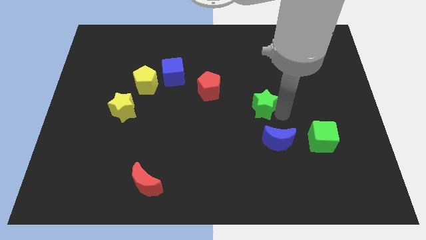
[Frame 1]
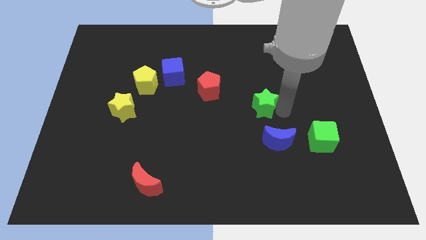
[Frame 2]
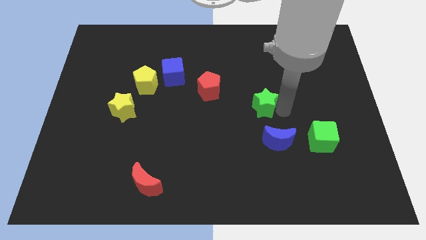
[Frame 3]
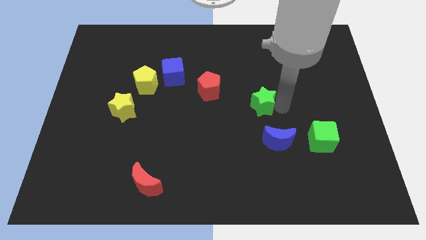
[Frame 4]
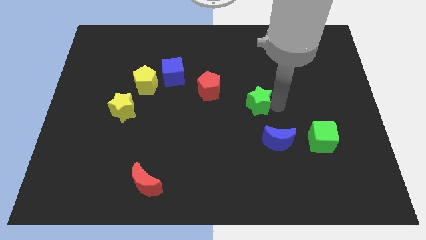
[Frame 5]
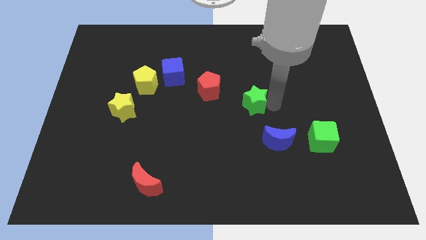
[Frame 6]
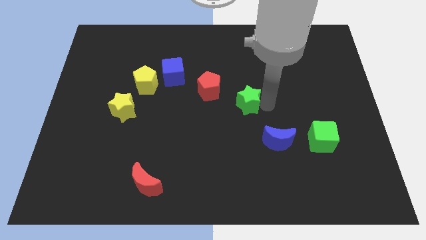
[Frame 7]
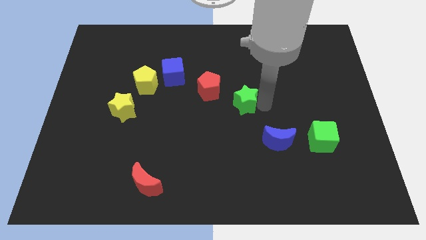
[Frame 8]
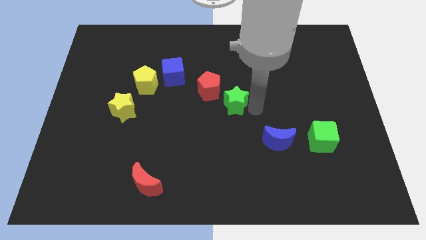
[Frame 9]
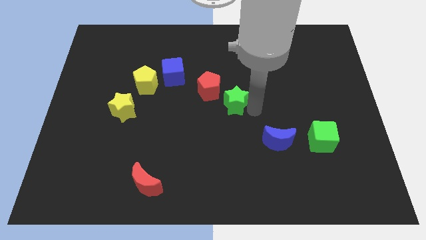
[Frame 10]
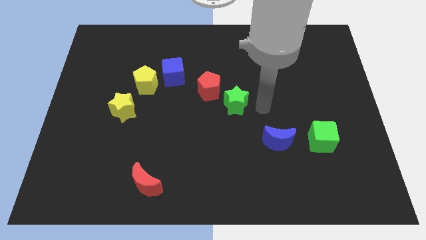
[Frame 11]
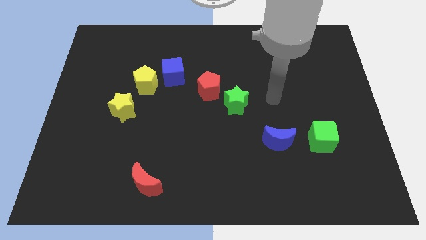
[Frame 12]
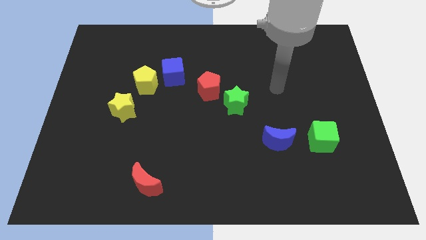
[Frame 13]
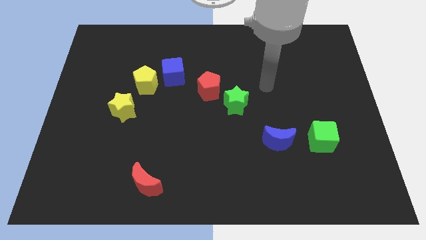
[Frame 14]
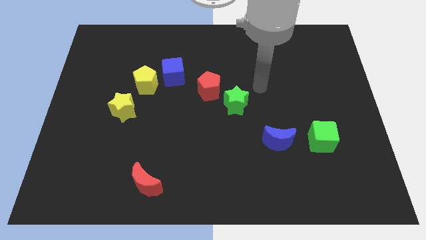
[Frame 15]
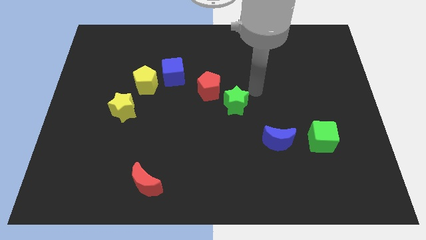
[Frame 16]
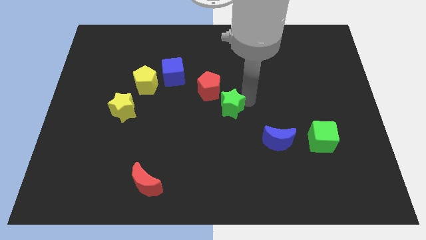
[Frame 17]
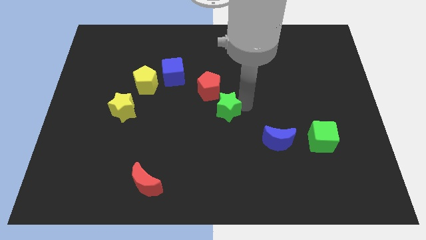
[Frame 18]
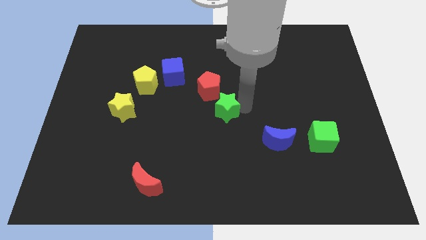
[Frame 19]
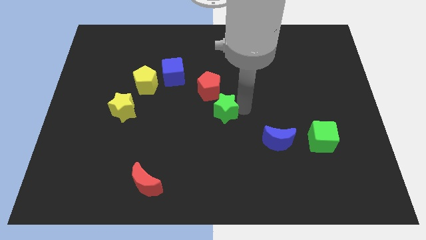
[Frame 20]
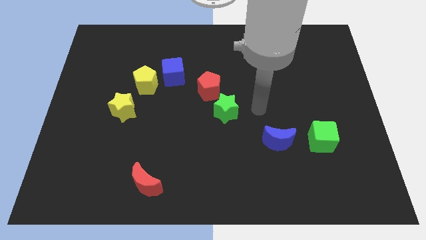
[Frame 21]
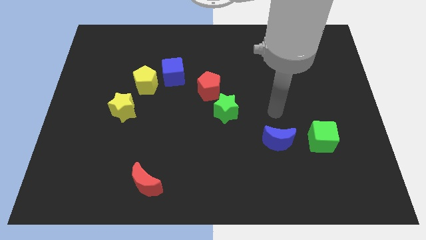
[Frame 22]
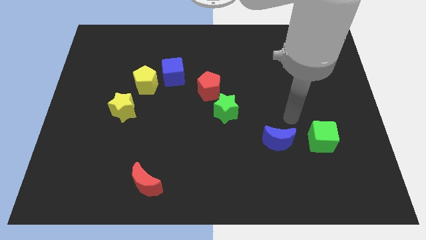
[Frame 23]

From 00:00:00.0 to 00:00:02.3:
push the green star diagonal below red pentagon

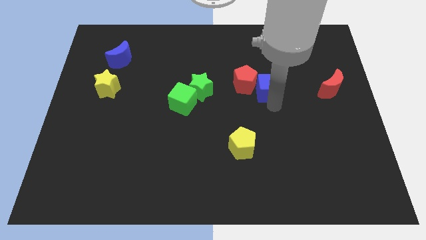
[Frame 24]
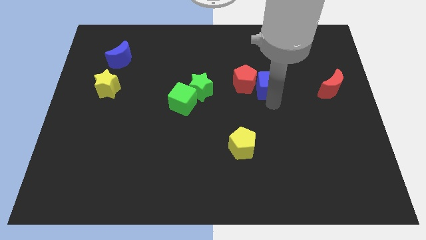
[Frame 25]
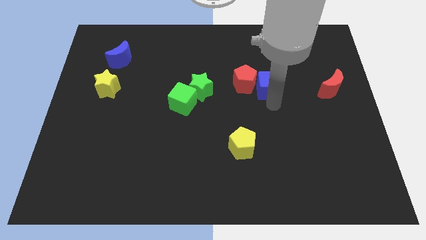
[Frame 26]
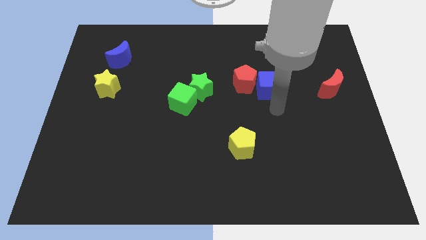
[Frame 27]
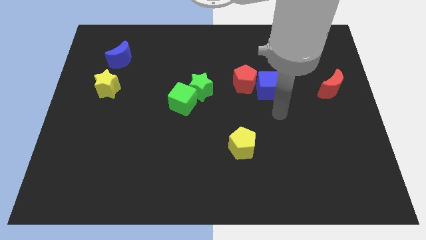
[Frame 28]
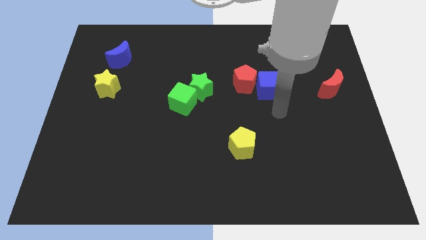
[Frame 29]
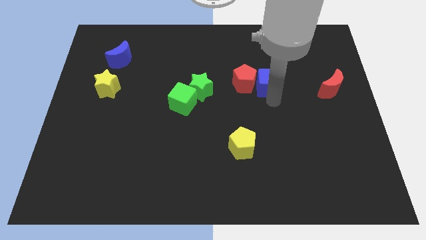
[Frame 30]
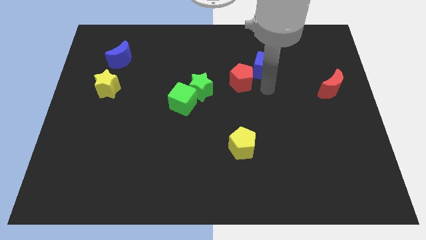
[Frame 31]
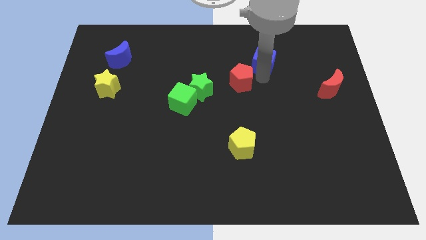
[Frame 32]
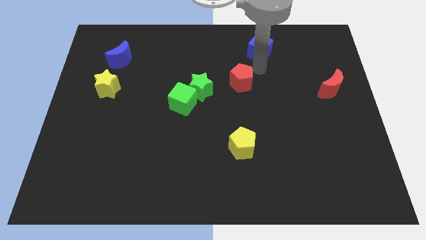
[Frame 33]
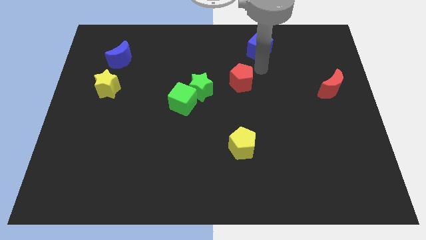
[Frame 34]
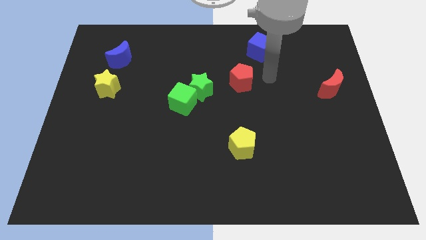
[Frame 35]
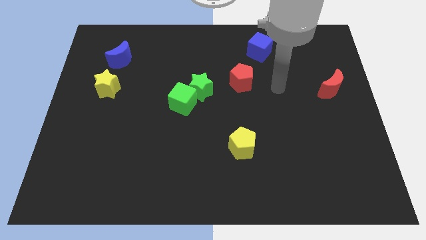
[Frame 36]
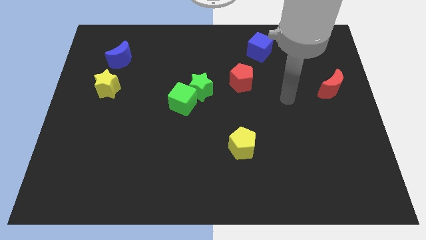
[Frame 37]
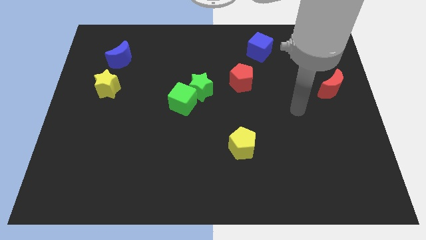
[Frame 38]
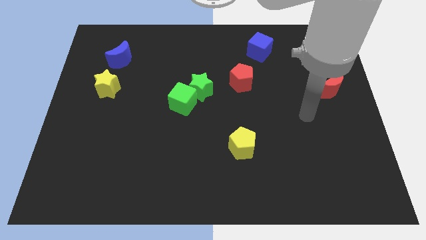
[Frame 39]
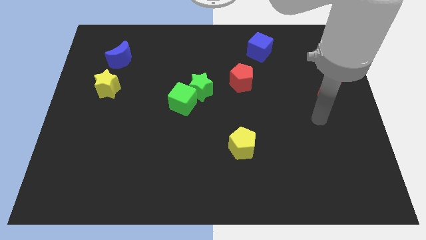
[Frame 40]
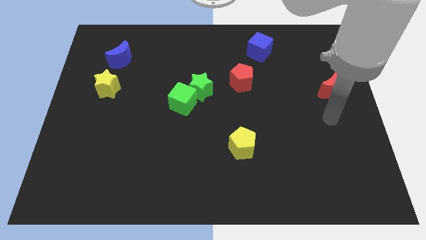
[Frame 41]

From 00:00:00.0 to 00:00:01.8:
push the blue cube to the top center of the board

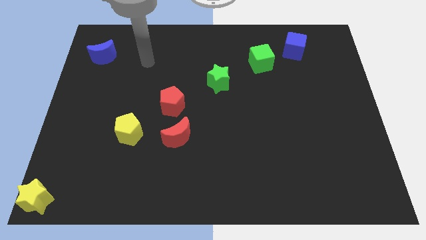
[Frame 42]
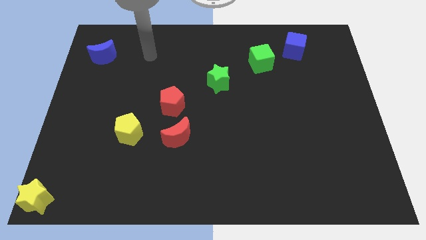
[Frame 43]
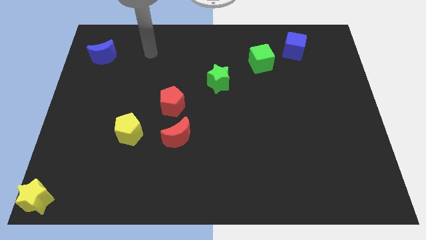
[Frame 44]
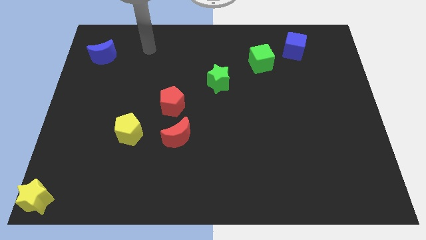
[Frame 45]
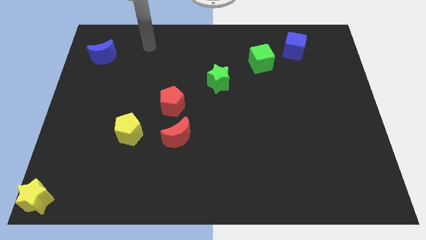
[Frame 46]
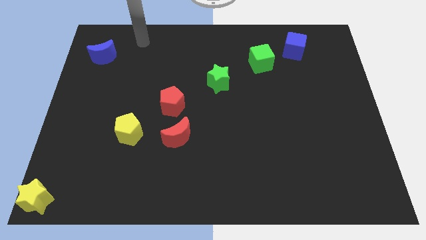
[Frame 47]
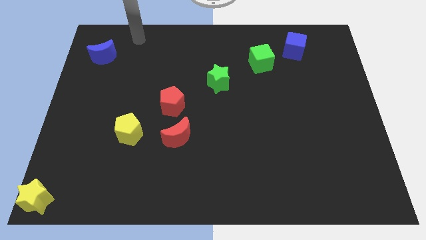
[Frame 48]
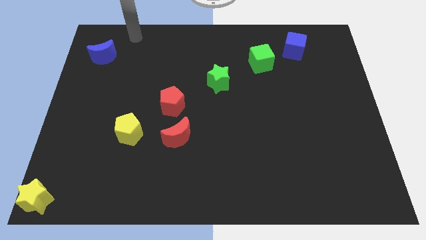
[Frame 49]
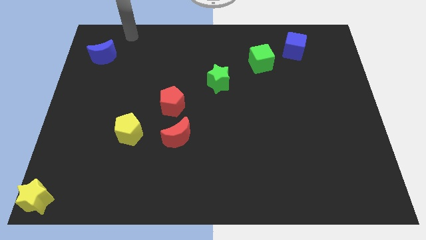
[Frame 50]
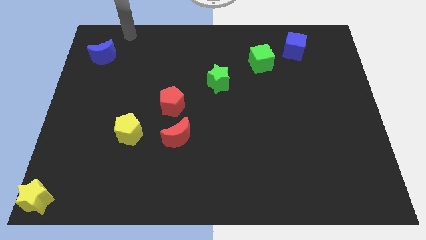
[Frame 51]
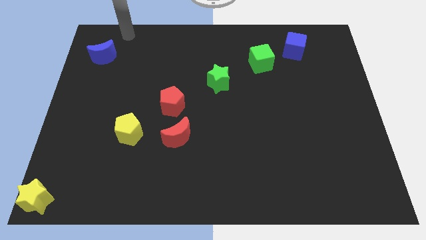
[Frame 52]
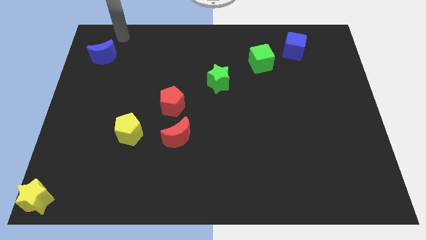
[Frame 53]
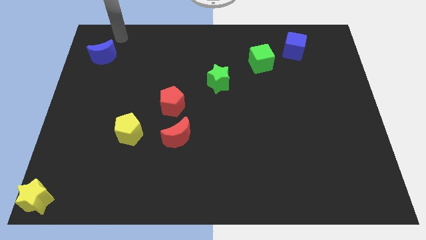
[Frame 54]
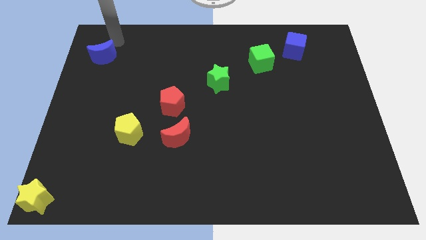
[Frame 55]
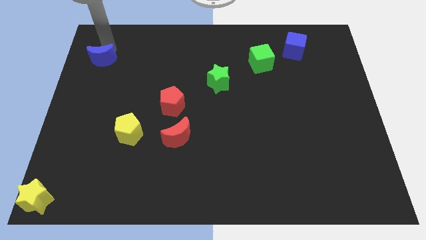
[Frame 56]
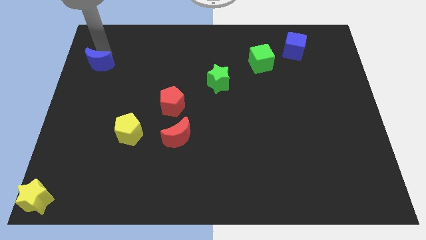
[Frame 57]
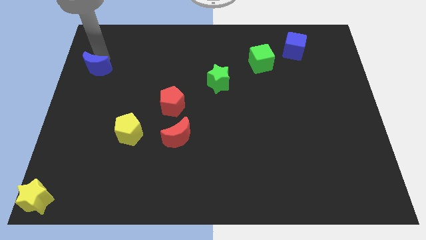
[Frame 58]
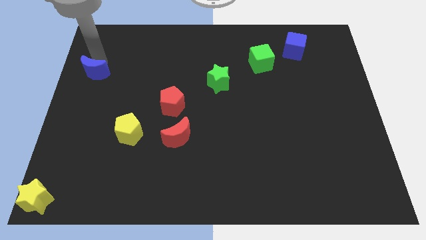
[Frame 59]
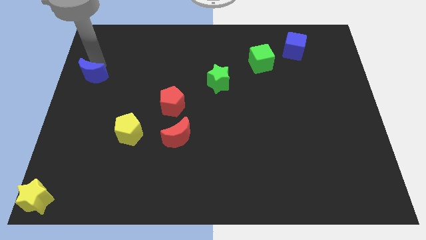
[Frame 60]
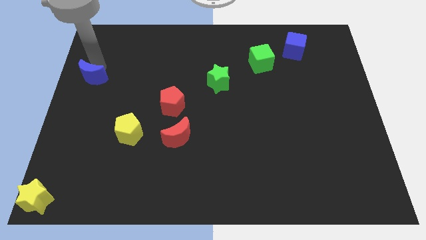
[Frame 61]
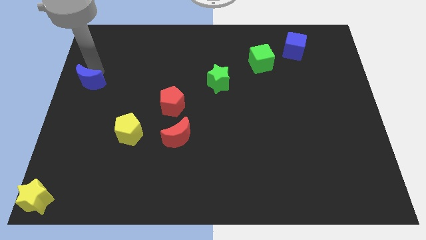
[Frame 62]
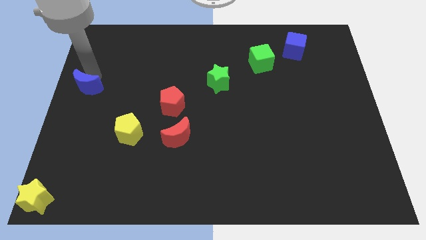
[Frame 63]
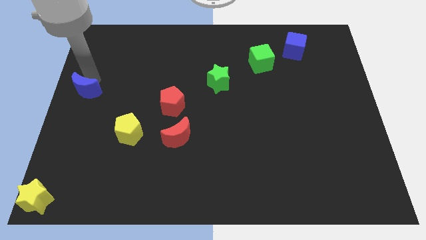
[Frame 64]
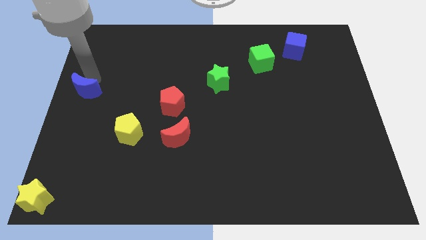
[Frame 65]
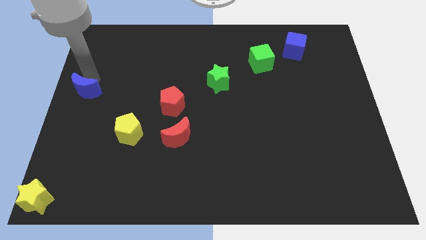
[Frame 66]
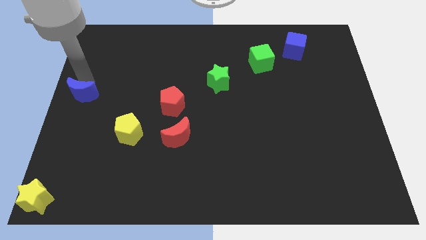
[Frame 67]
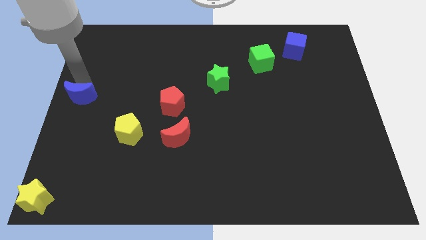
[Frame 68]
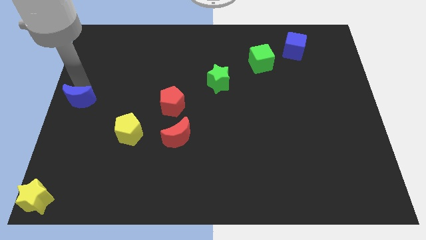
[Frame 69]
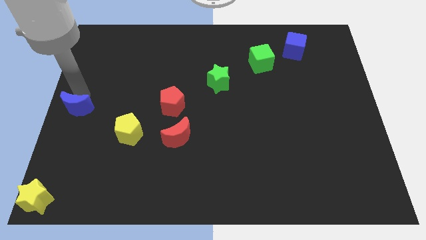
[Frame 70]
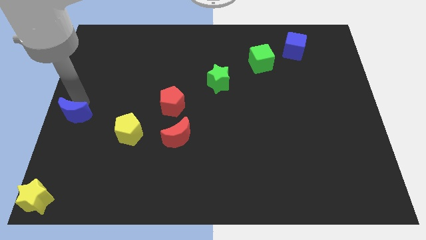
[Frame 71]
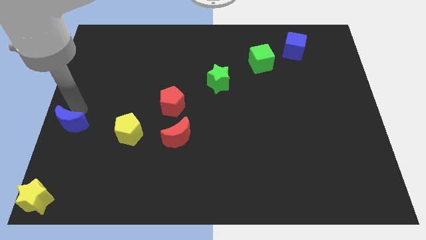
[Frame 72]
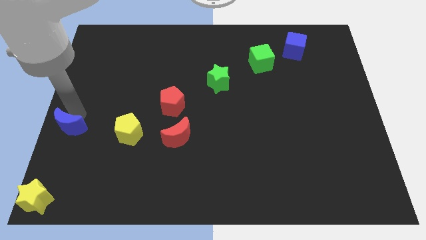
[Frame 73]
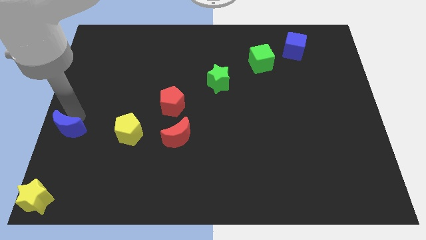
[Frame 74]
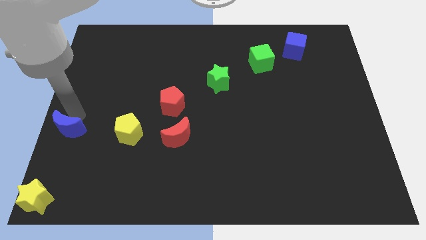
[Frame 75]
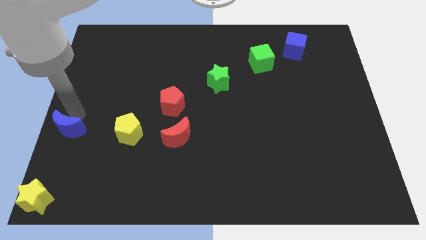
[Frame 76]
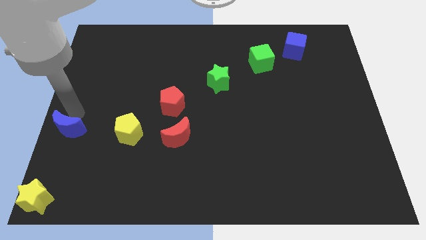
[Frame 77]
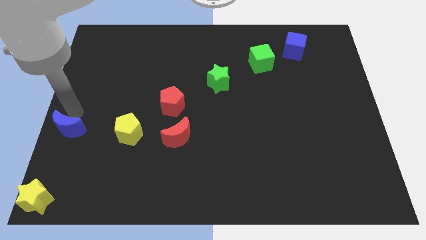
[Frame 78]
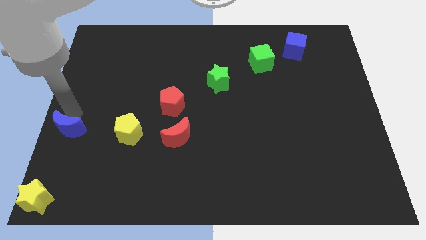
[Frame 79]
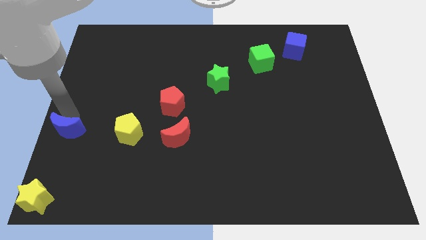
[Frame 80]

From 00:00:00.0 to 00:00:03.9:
place the blue crescent to the left of the yellow pentagon

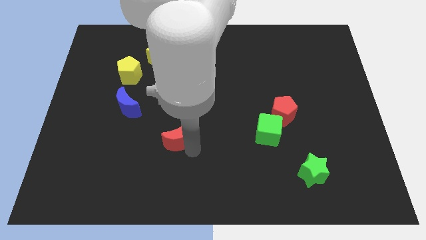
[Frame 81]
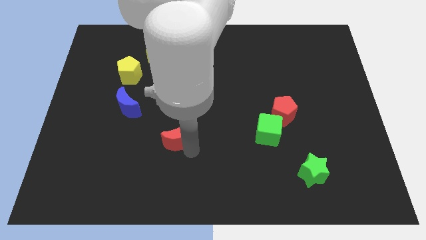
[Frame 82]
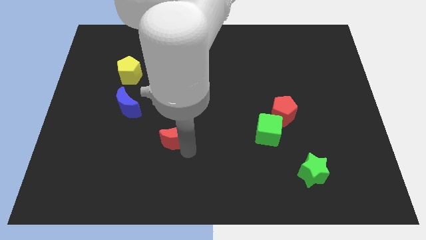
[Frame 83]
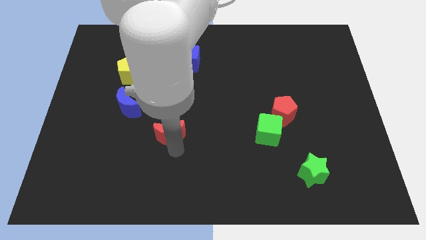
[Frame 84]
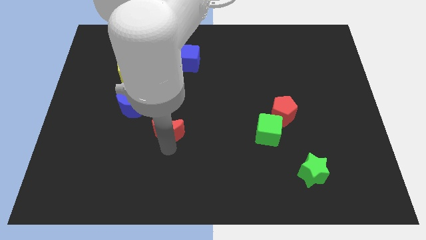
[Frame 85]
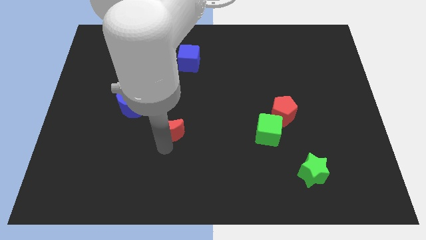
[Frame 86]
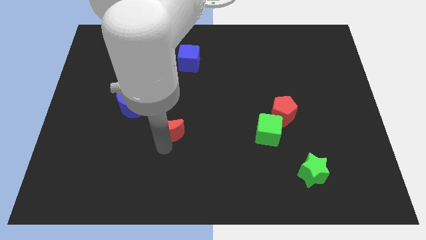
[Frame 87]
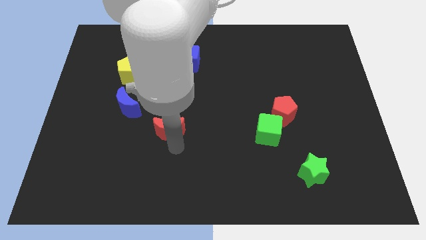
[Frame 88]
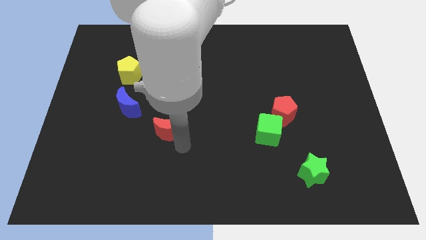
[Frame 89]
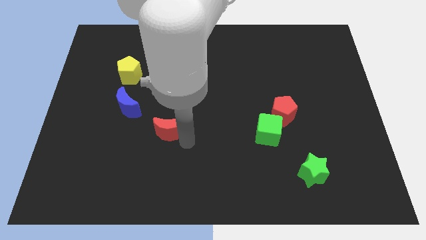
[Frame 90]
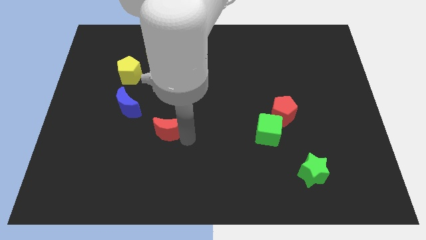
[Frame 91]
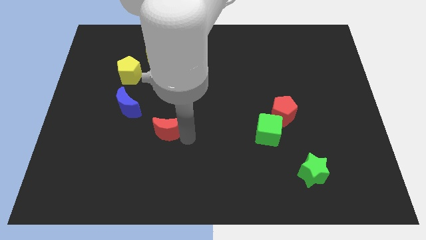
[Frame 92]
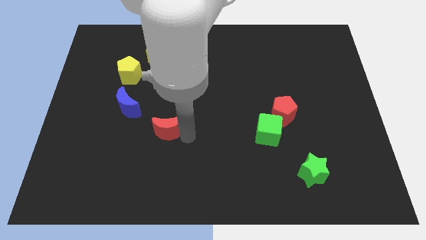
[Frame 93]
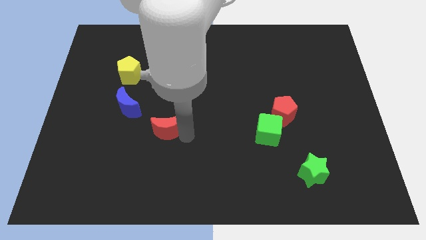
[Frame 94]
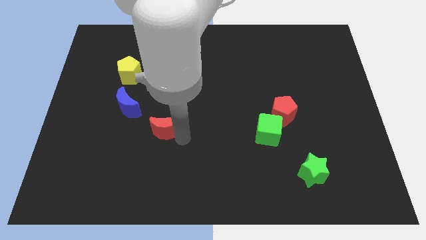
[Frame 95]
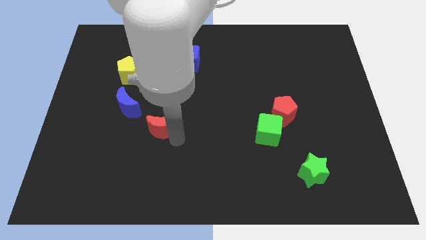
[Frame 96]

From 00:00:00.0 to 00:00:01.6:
put the red crescent vertically below the yellow star
